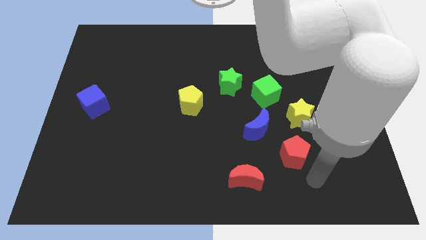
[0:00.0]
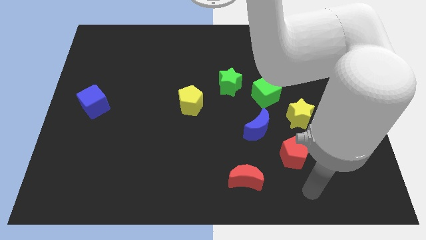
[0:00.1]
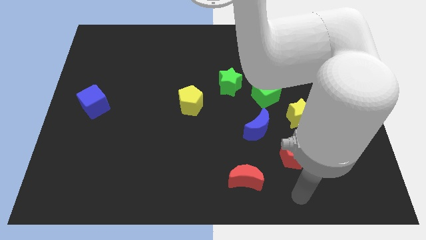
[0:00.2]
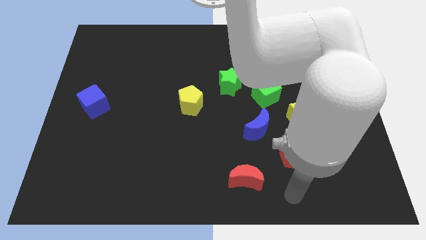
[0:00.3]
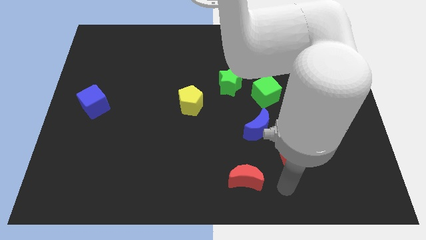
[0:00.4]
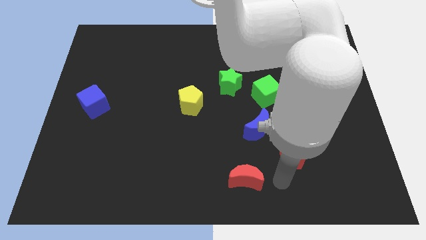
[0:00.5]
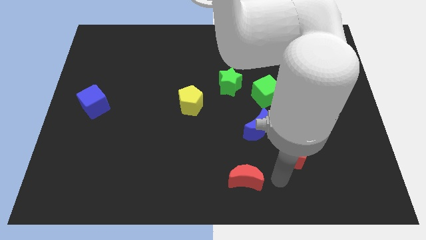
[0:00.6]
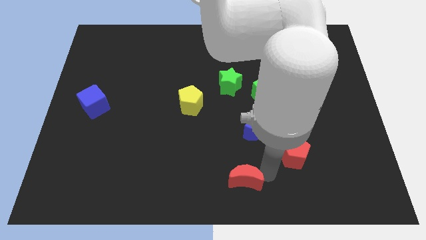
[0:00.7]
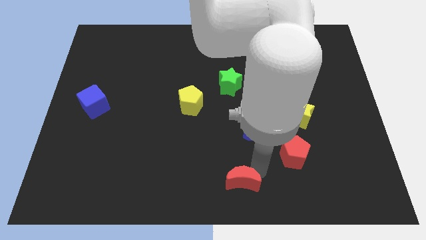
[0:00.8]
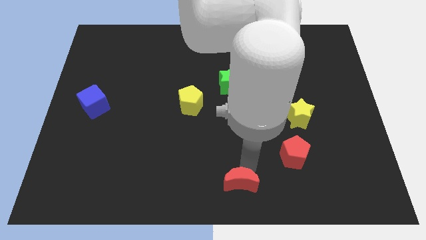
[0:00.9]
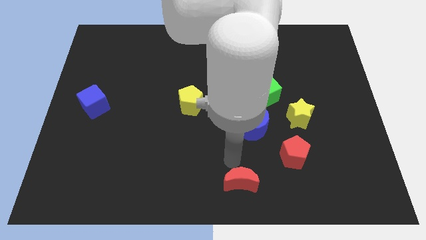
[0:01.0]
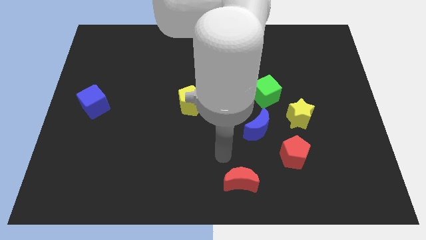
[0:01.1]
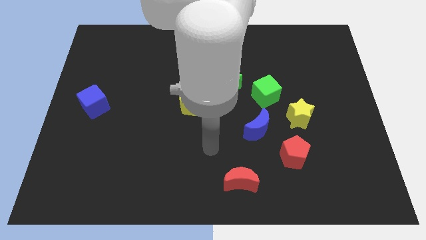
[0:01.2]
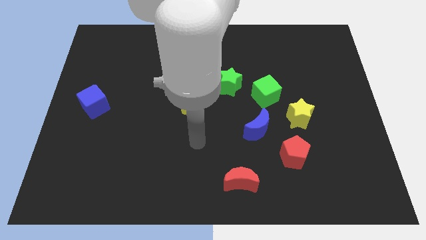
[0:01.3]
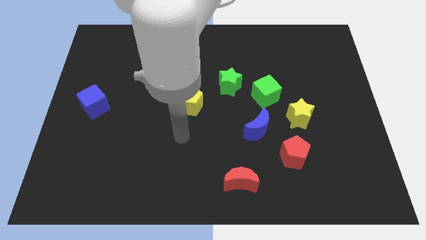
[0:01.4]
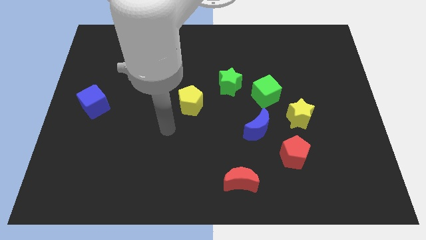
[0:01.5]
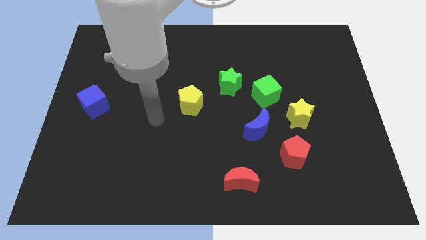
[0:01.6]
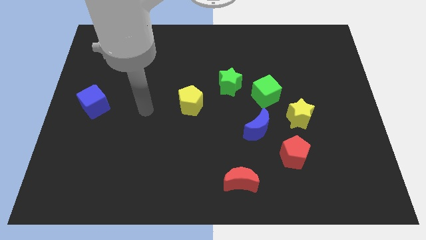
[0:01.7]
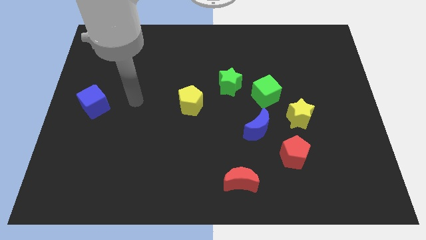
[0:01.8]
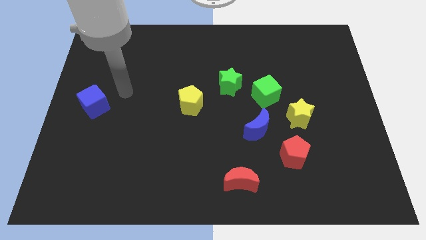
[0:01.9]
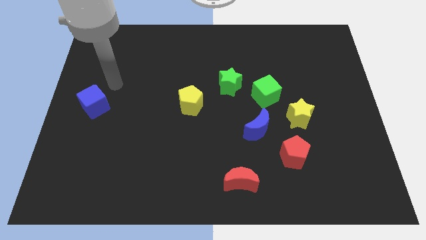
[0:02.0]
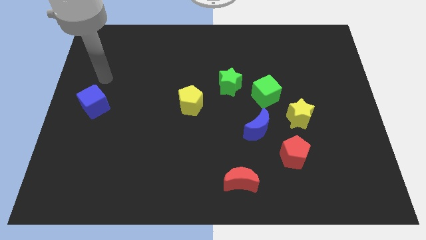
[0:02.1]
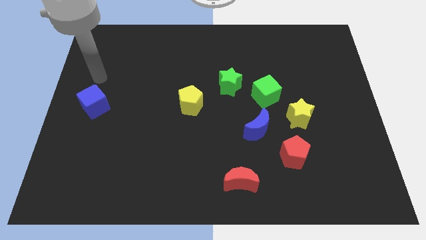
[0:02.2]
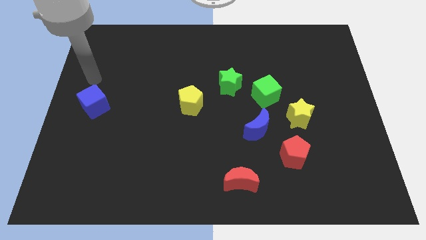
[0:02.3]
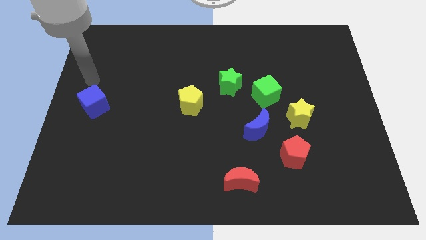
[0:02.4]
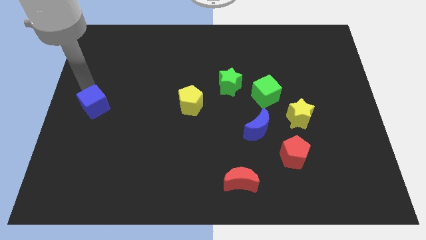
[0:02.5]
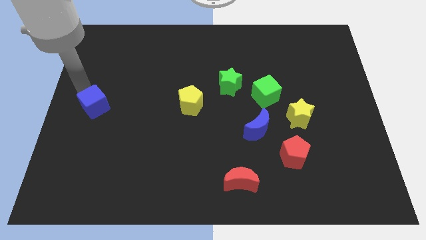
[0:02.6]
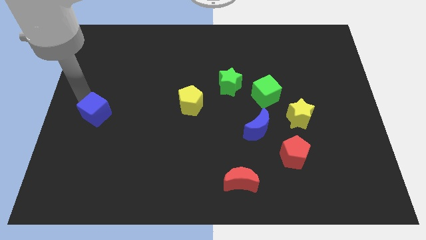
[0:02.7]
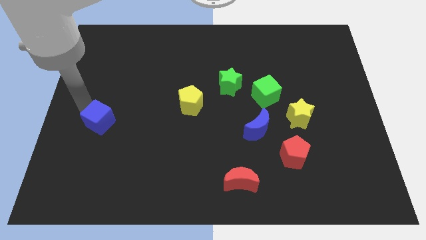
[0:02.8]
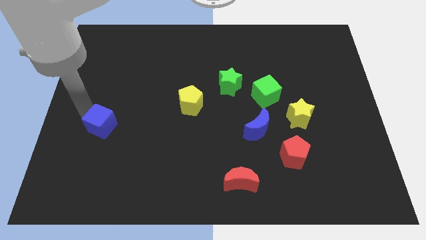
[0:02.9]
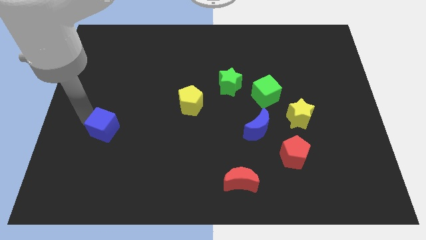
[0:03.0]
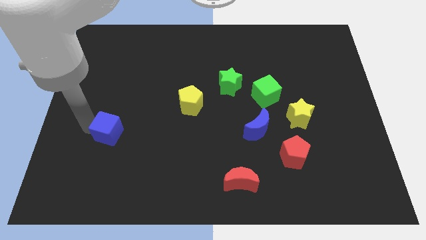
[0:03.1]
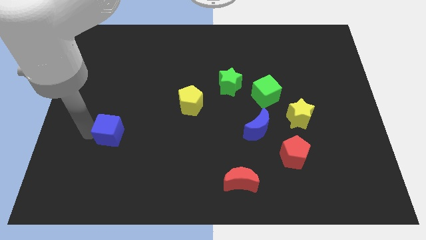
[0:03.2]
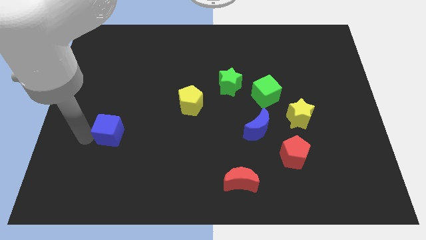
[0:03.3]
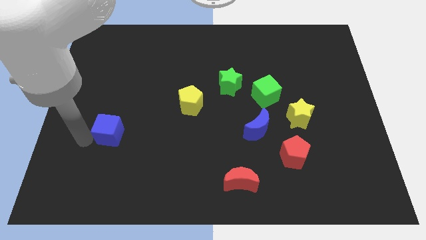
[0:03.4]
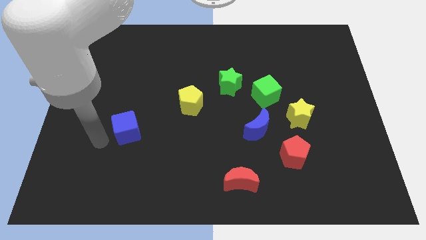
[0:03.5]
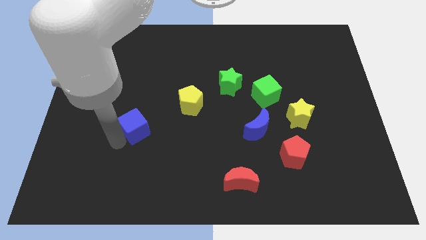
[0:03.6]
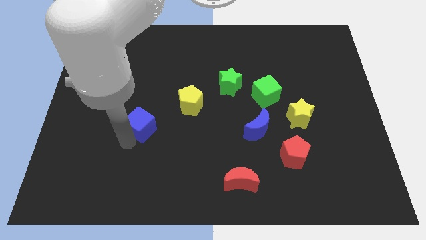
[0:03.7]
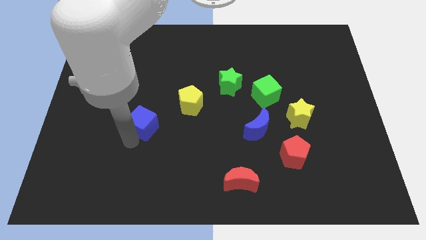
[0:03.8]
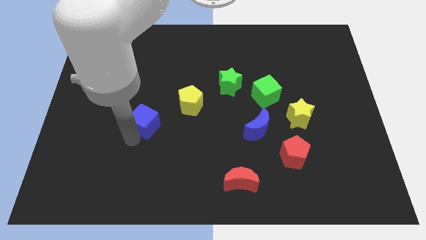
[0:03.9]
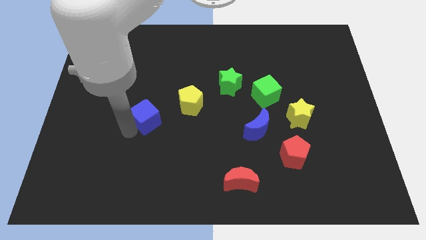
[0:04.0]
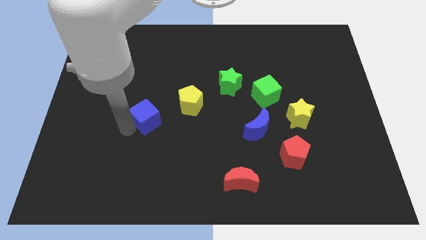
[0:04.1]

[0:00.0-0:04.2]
slide the blue cube towards the yellow pentagon

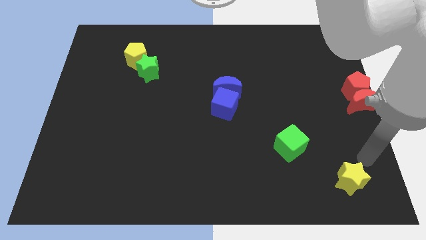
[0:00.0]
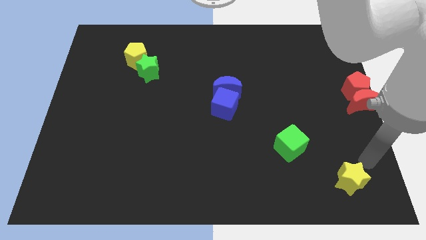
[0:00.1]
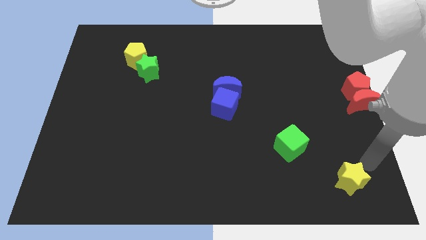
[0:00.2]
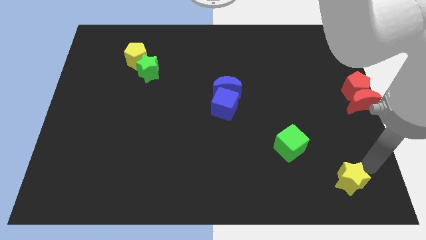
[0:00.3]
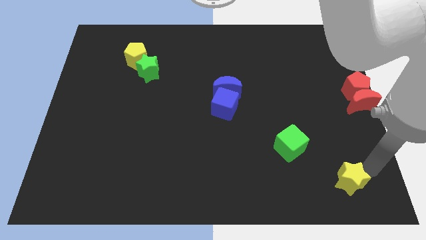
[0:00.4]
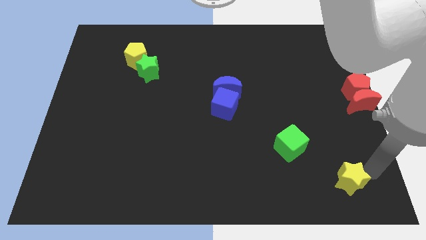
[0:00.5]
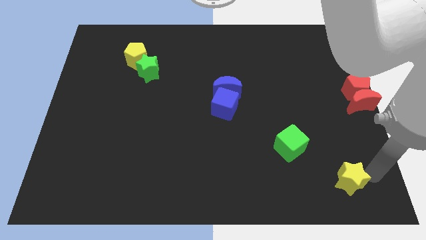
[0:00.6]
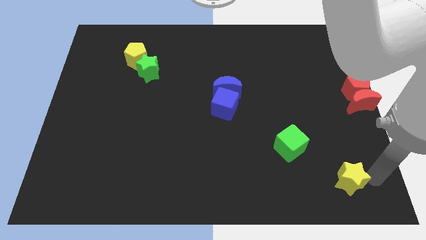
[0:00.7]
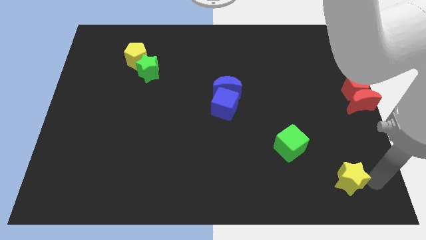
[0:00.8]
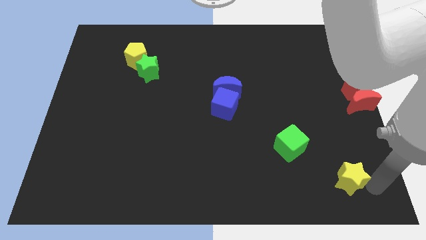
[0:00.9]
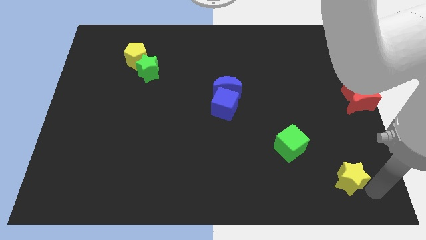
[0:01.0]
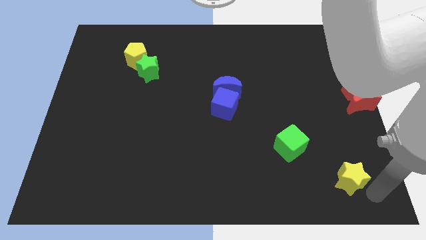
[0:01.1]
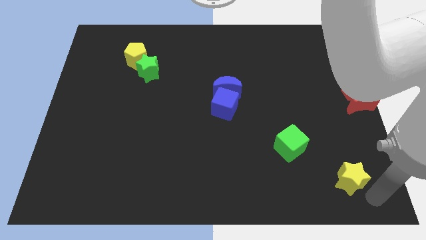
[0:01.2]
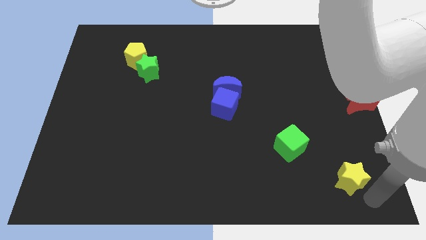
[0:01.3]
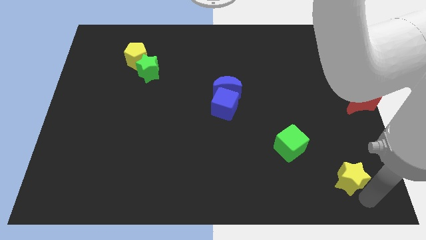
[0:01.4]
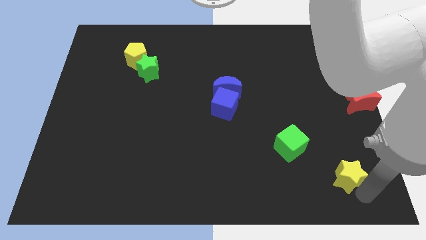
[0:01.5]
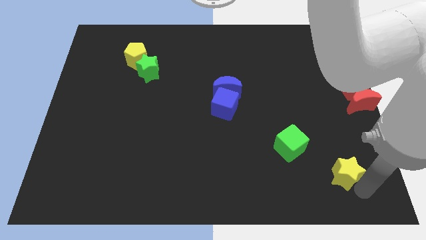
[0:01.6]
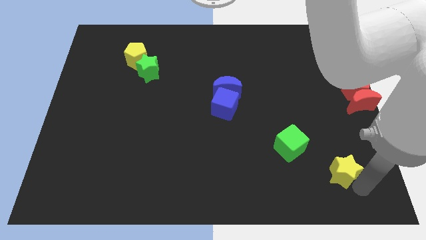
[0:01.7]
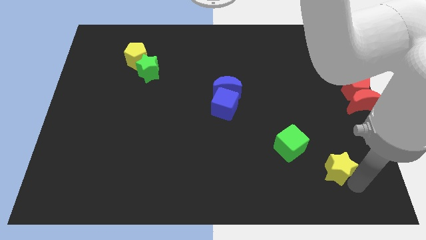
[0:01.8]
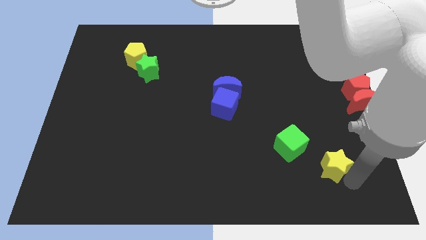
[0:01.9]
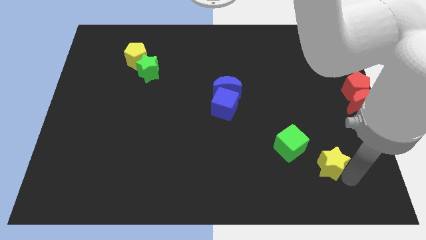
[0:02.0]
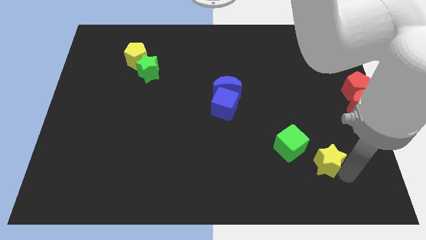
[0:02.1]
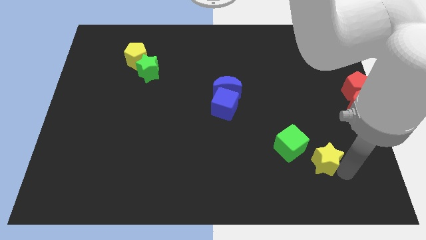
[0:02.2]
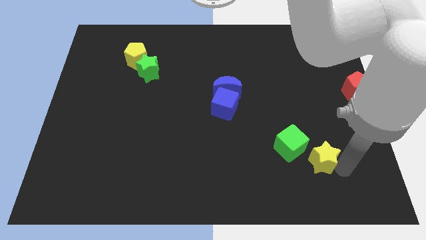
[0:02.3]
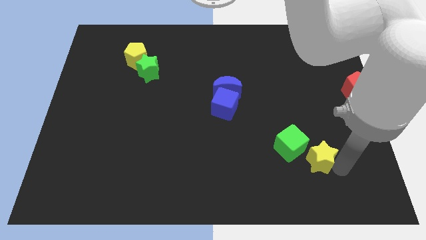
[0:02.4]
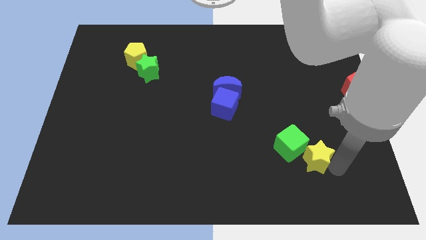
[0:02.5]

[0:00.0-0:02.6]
place the yellow star at the bottom right side of green cube

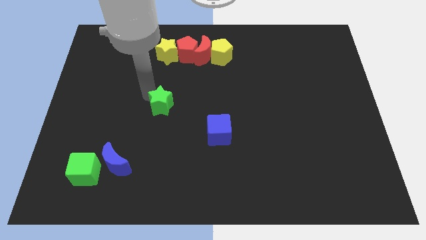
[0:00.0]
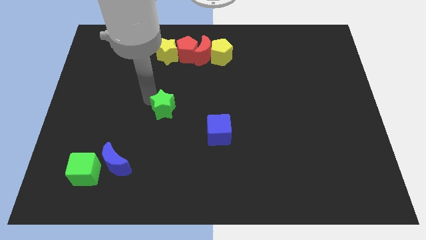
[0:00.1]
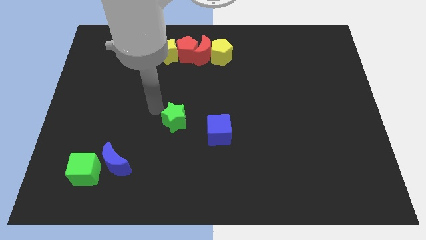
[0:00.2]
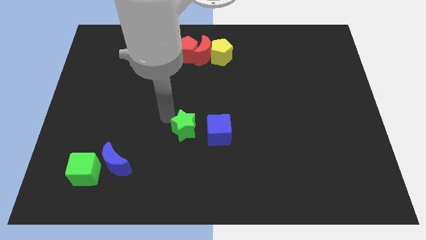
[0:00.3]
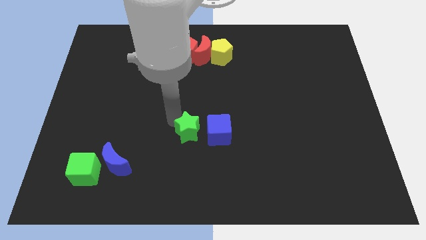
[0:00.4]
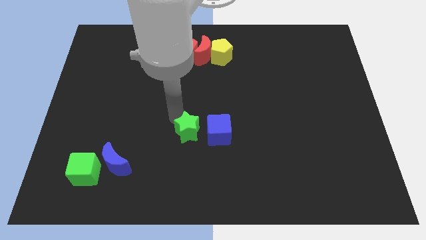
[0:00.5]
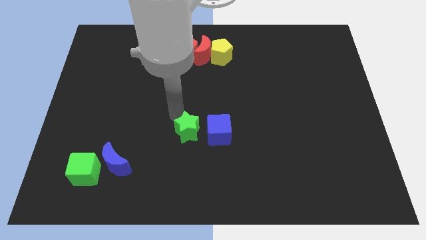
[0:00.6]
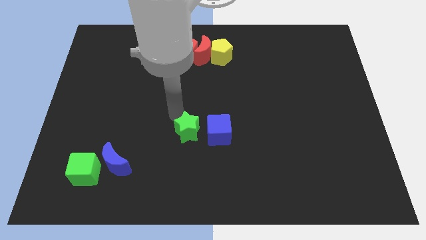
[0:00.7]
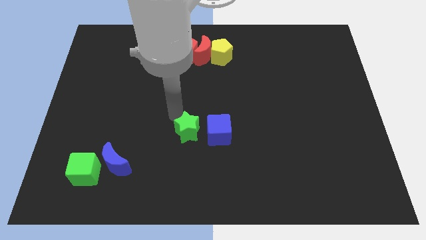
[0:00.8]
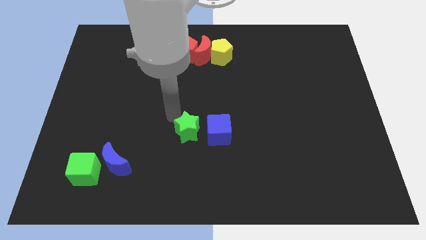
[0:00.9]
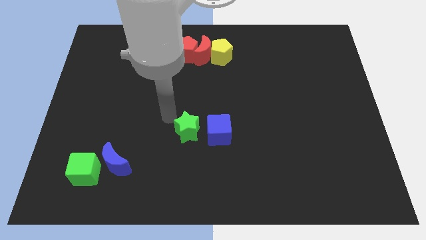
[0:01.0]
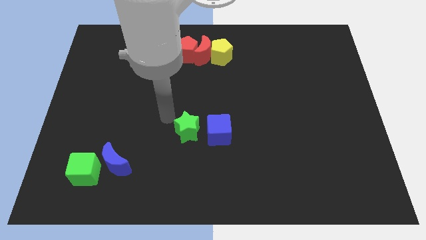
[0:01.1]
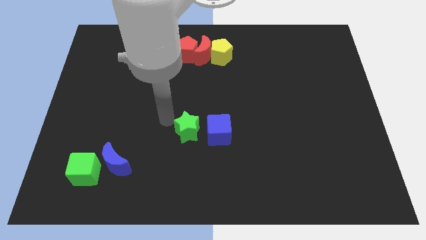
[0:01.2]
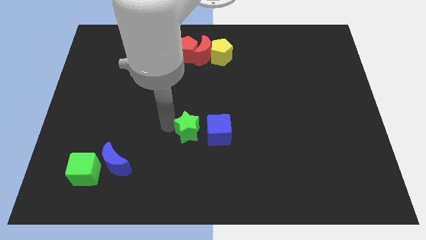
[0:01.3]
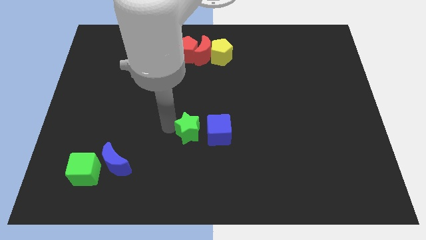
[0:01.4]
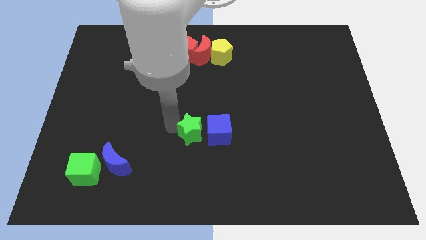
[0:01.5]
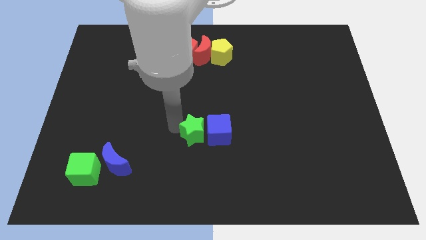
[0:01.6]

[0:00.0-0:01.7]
place green star left of blue cube at the middle of board

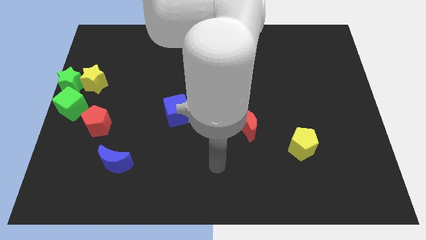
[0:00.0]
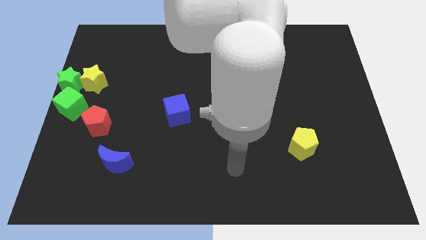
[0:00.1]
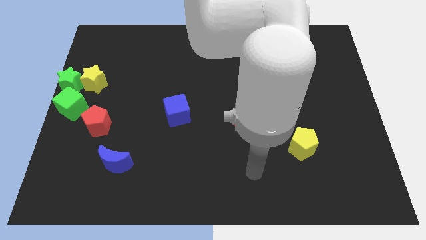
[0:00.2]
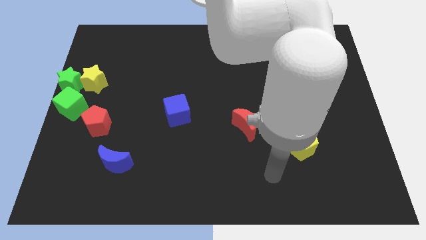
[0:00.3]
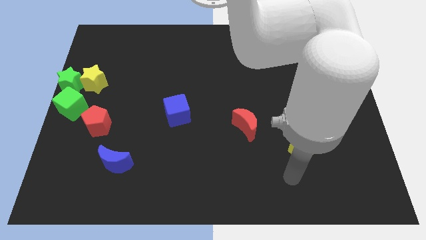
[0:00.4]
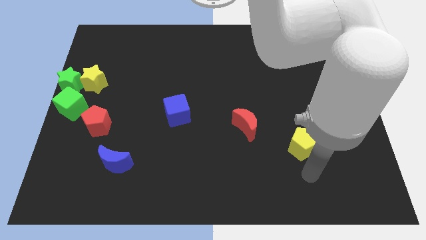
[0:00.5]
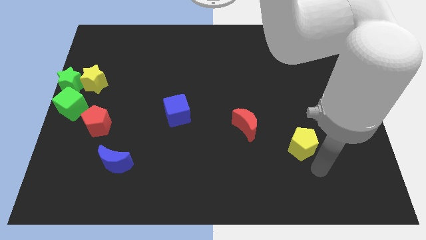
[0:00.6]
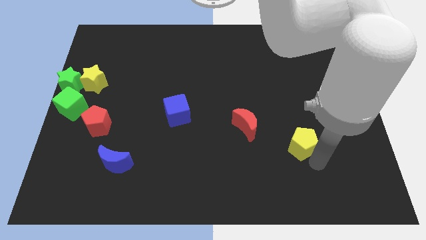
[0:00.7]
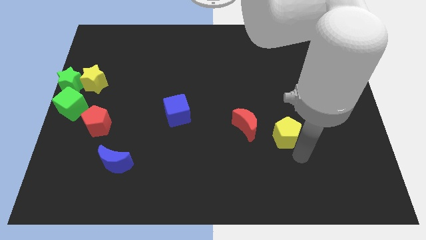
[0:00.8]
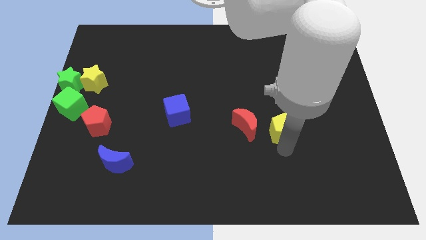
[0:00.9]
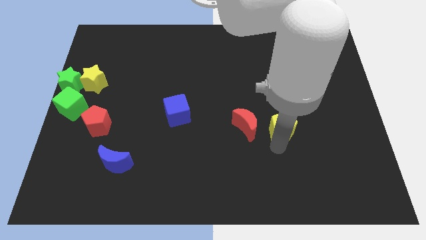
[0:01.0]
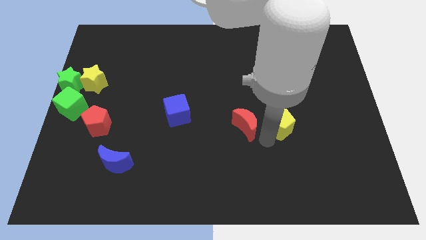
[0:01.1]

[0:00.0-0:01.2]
place the yellow pentagon to the right of red moon
